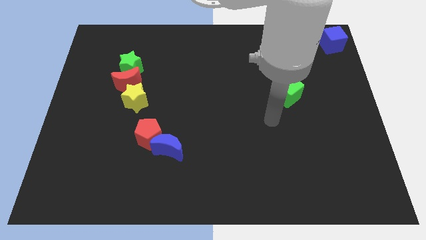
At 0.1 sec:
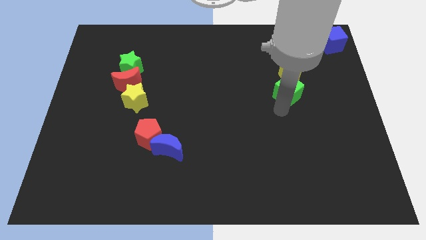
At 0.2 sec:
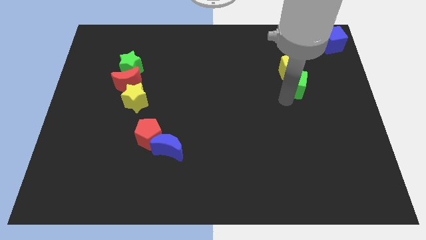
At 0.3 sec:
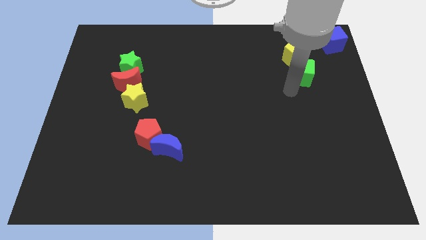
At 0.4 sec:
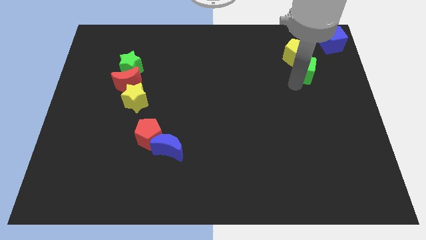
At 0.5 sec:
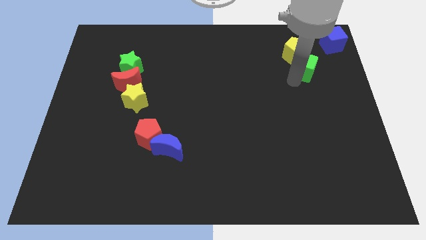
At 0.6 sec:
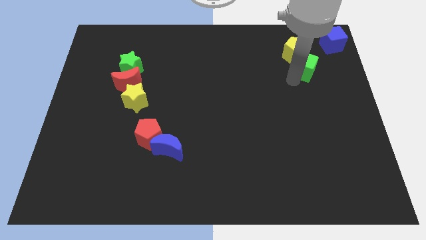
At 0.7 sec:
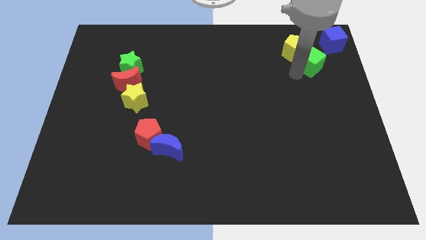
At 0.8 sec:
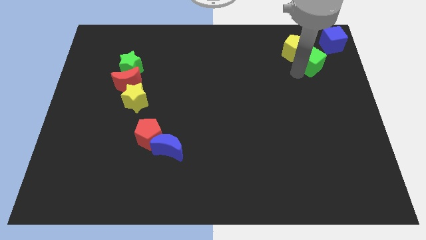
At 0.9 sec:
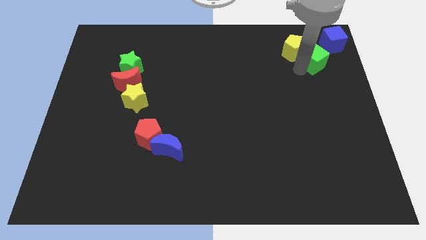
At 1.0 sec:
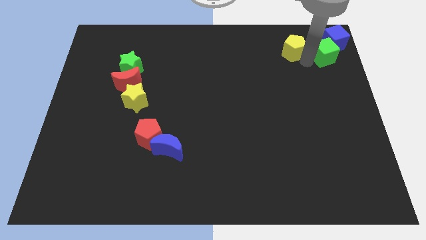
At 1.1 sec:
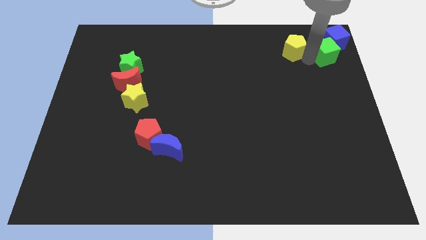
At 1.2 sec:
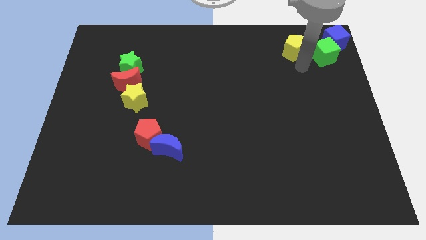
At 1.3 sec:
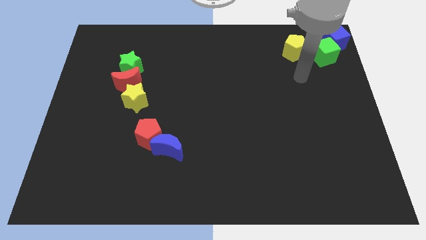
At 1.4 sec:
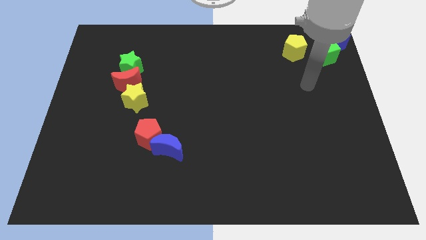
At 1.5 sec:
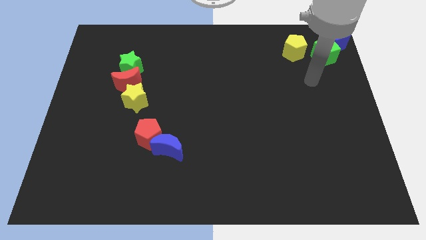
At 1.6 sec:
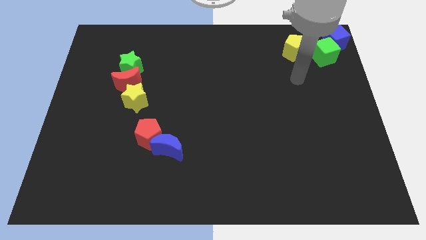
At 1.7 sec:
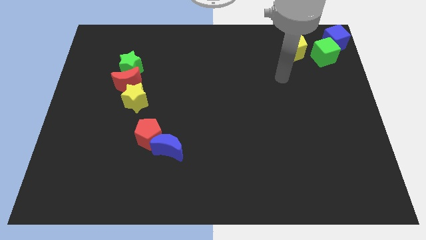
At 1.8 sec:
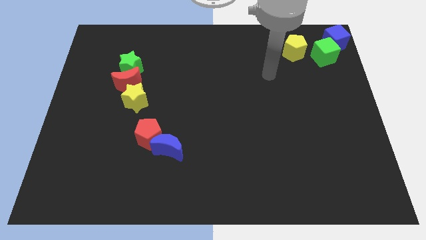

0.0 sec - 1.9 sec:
slide the green cube to the bottom left of the blue cube

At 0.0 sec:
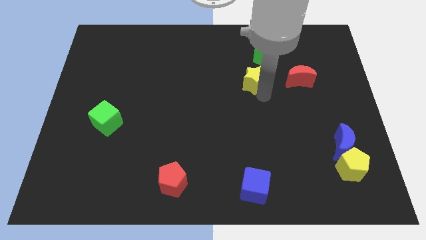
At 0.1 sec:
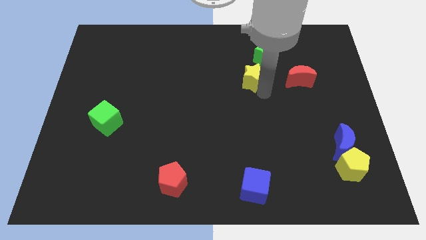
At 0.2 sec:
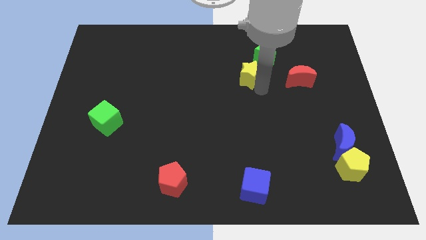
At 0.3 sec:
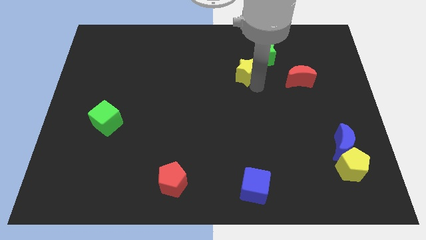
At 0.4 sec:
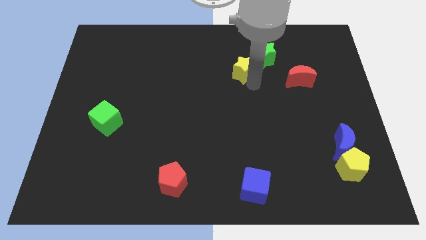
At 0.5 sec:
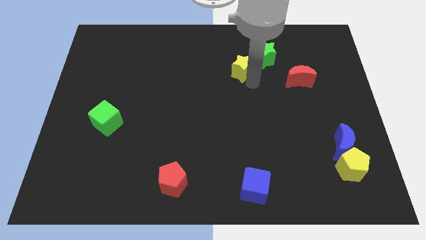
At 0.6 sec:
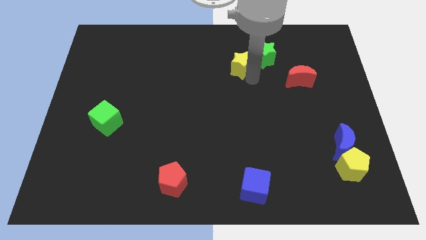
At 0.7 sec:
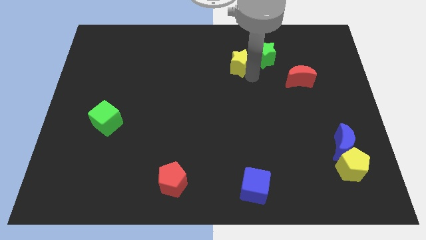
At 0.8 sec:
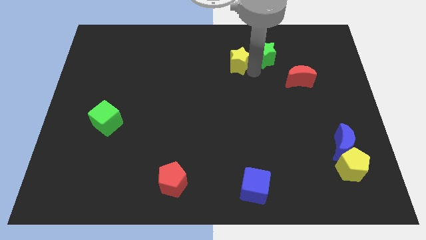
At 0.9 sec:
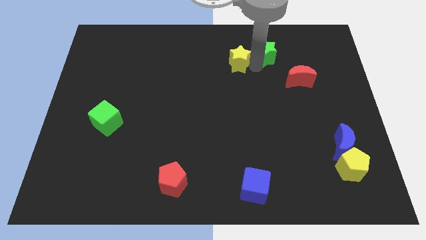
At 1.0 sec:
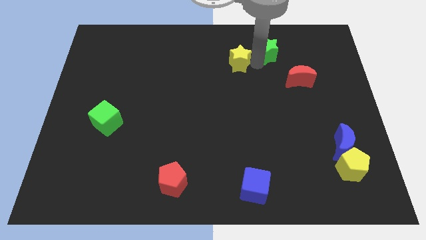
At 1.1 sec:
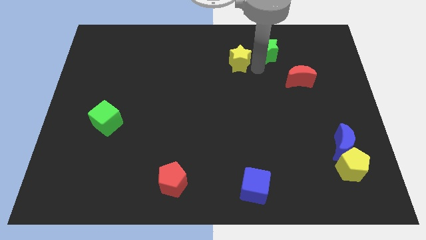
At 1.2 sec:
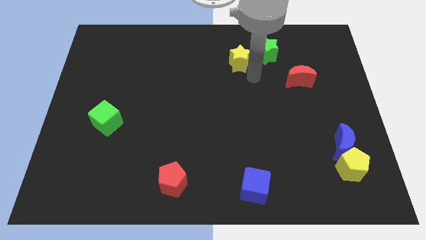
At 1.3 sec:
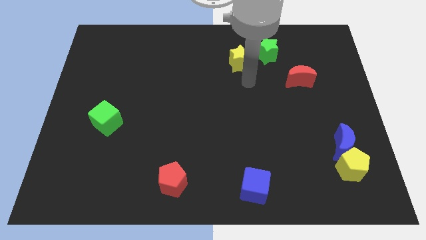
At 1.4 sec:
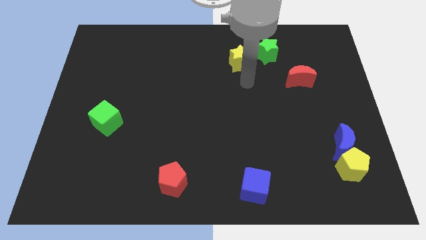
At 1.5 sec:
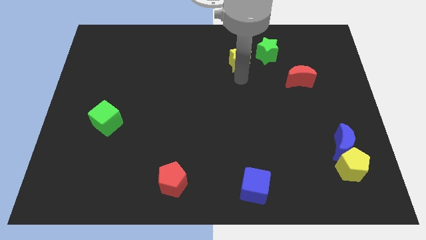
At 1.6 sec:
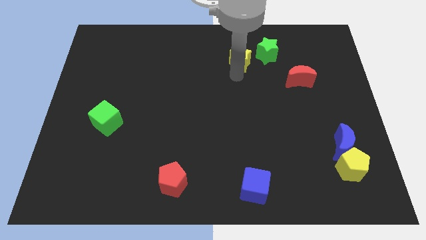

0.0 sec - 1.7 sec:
place the yellow star to the left side of the green star

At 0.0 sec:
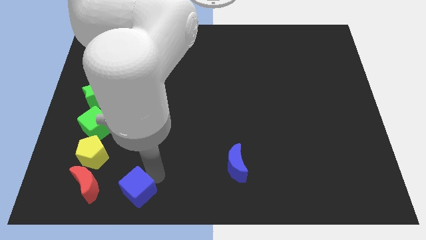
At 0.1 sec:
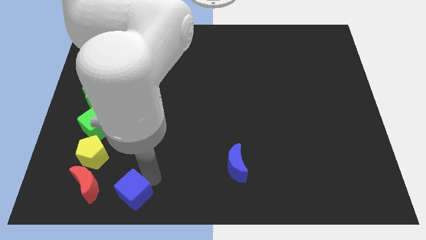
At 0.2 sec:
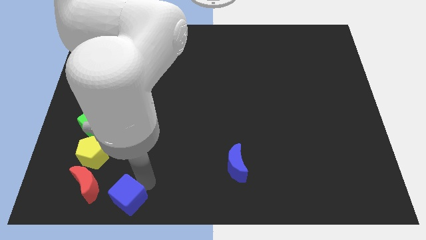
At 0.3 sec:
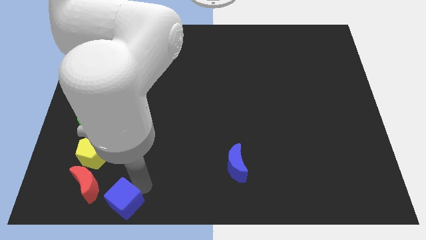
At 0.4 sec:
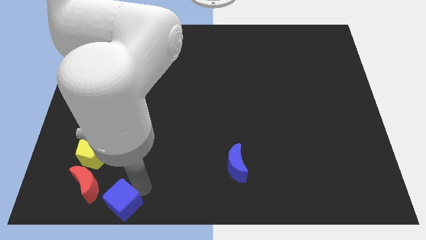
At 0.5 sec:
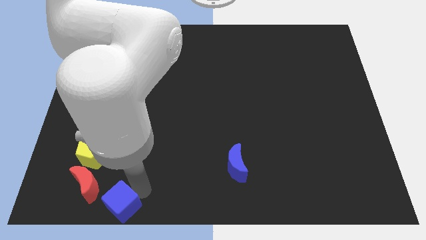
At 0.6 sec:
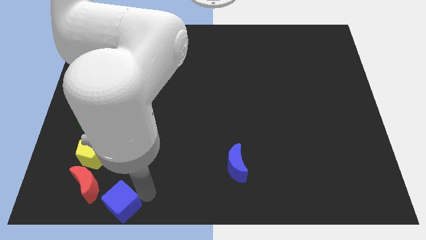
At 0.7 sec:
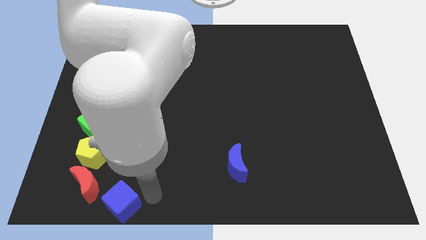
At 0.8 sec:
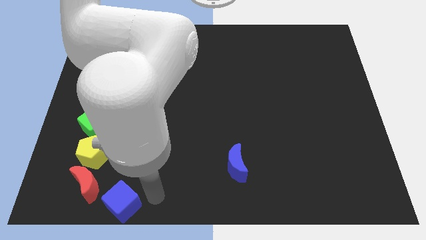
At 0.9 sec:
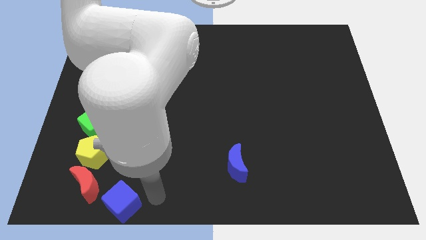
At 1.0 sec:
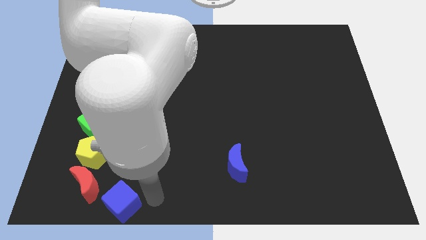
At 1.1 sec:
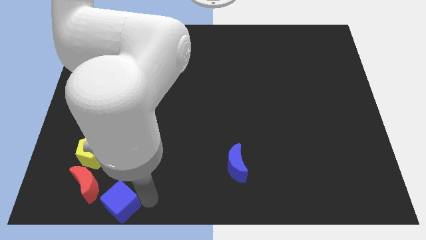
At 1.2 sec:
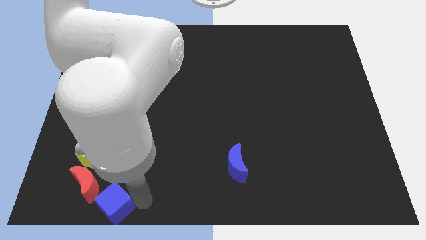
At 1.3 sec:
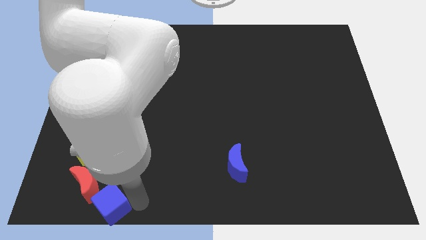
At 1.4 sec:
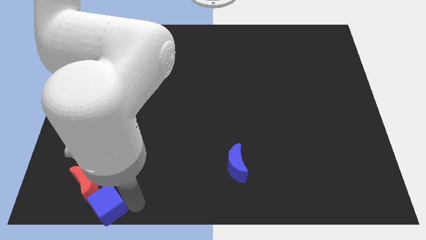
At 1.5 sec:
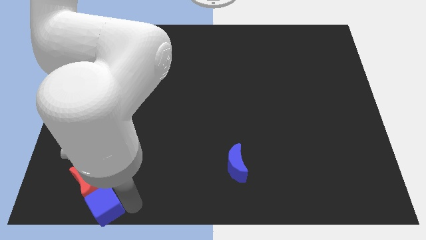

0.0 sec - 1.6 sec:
place the blue cube at the bottom right side of red crescent

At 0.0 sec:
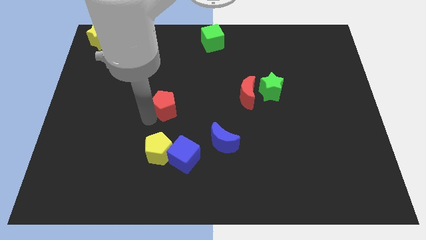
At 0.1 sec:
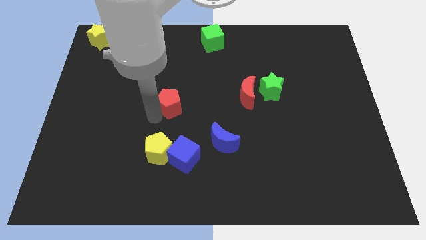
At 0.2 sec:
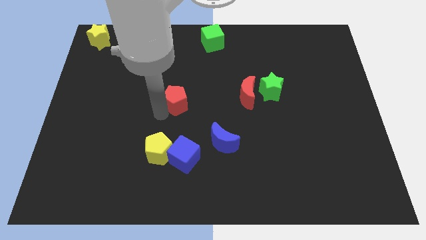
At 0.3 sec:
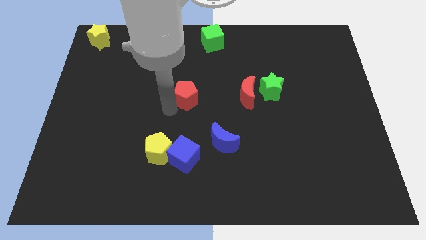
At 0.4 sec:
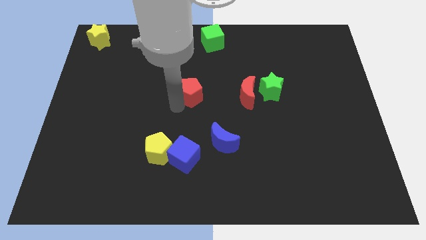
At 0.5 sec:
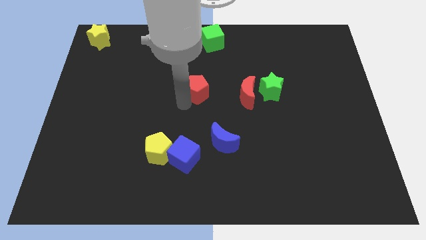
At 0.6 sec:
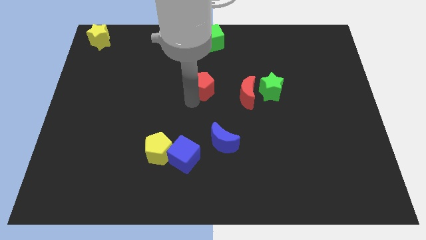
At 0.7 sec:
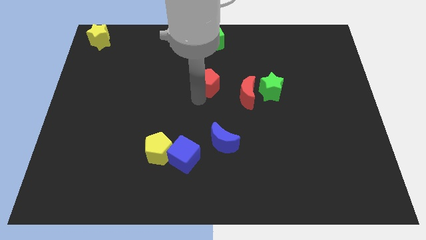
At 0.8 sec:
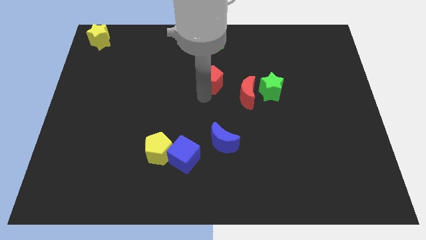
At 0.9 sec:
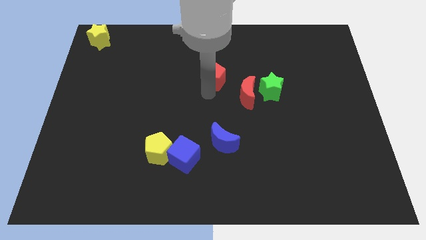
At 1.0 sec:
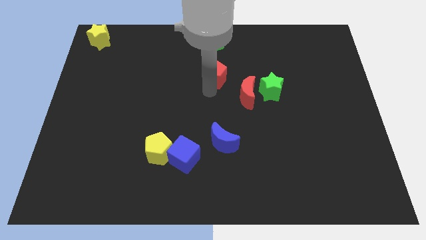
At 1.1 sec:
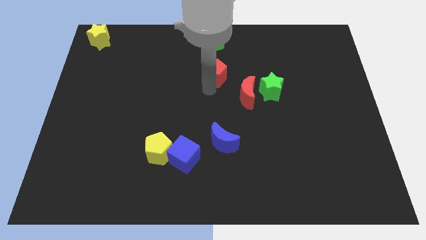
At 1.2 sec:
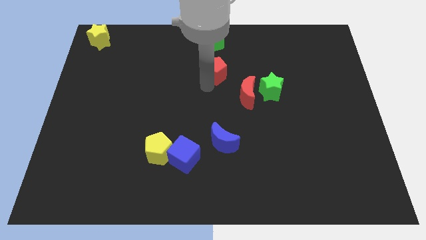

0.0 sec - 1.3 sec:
move the red pentagon below the green cube

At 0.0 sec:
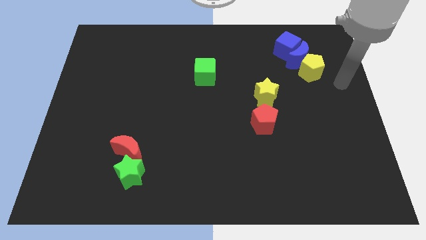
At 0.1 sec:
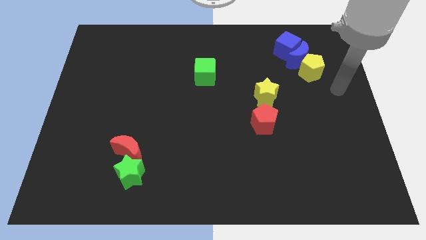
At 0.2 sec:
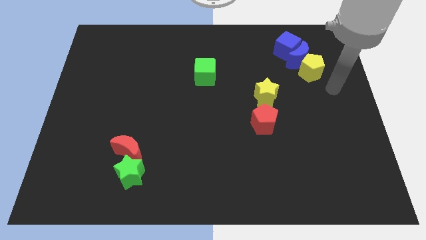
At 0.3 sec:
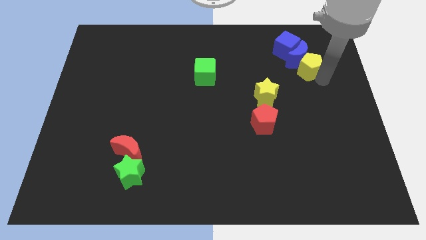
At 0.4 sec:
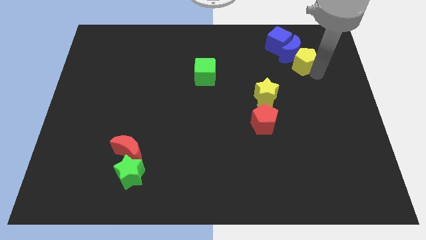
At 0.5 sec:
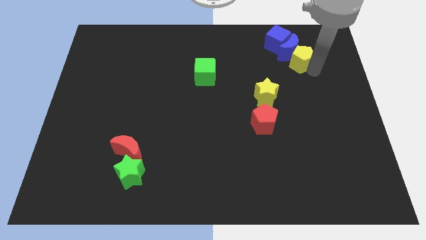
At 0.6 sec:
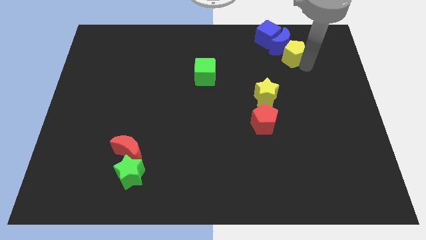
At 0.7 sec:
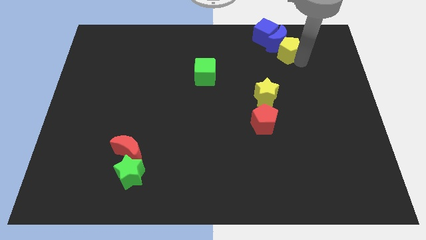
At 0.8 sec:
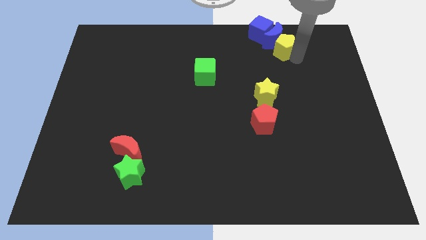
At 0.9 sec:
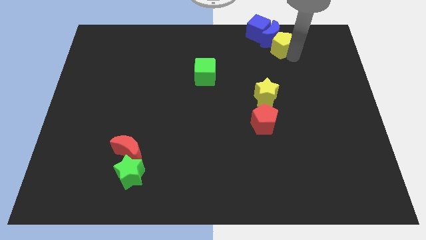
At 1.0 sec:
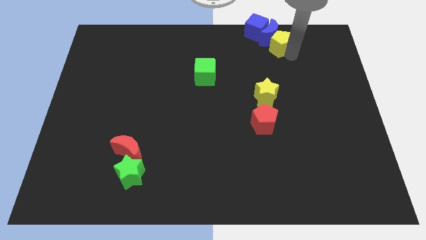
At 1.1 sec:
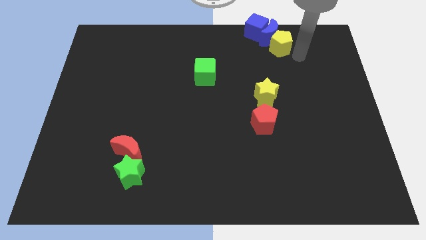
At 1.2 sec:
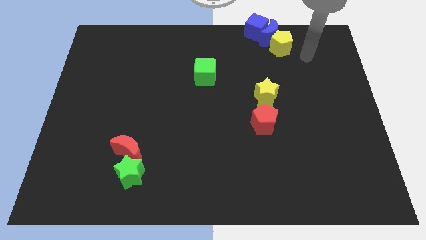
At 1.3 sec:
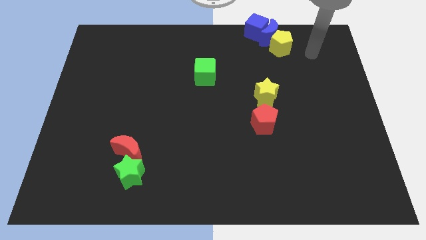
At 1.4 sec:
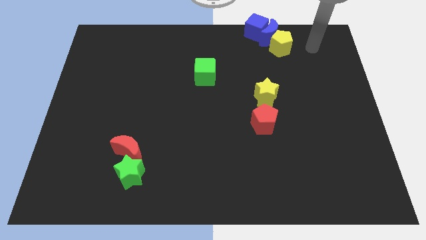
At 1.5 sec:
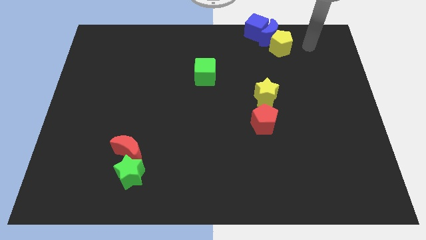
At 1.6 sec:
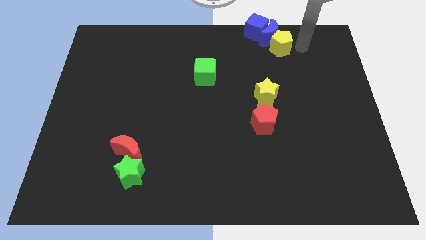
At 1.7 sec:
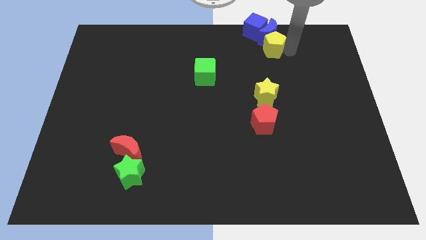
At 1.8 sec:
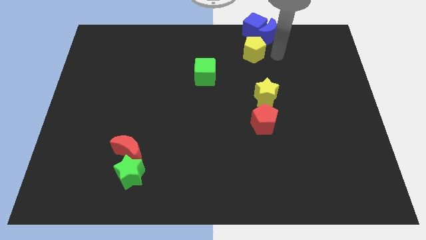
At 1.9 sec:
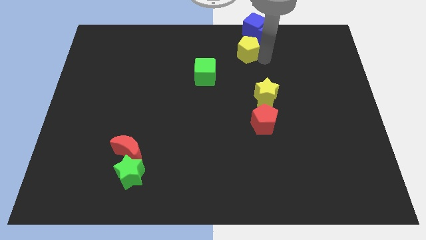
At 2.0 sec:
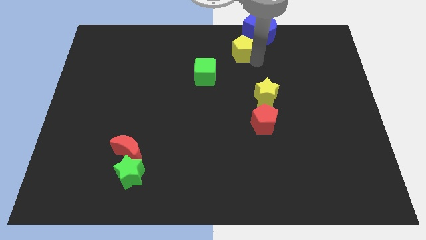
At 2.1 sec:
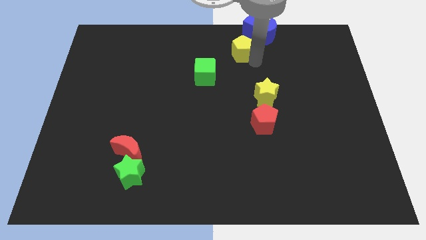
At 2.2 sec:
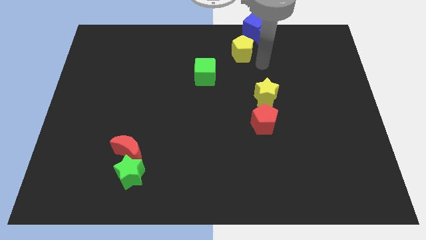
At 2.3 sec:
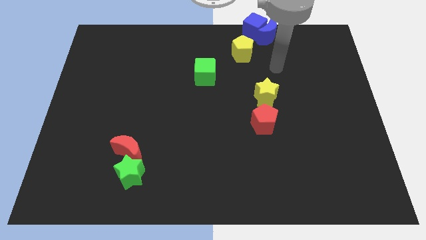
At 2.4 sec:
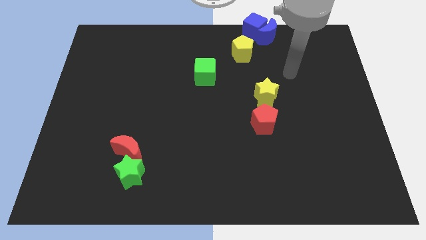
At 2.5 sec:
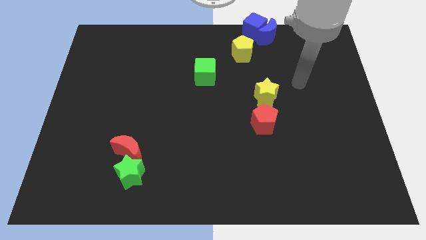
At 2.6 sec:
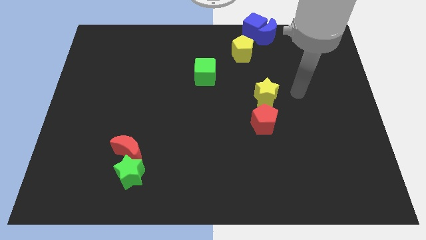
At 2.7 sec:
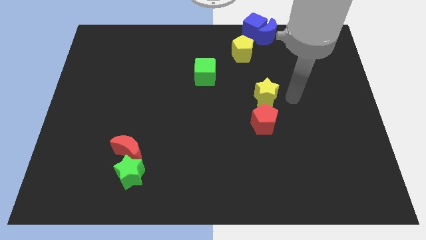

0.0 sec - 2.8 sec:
place the yellow pentagon to the bottom of the blue cube
